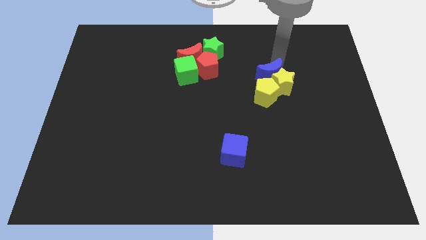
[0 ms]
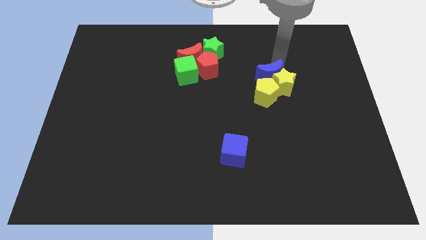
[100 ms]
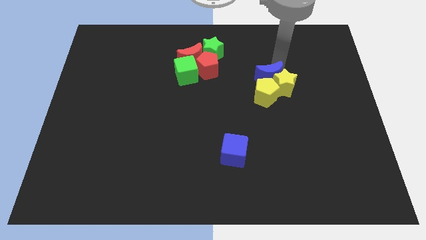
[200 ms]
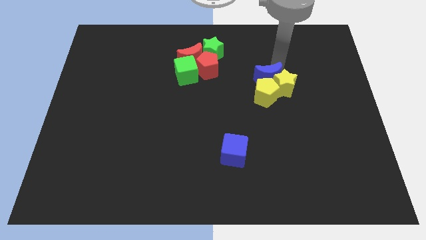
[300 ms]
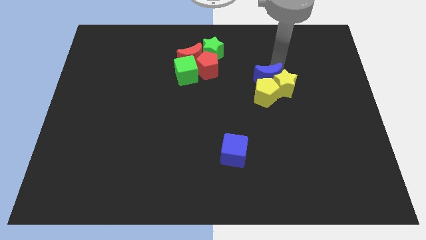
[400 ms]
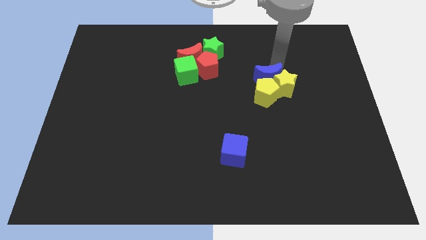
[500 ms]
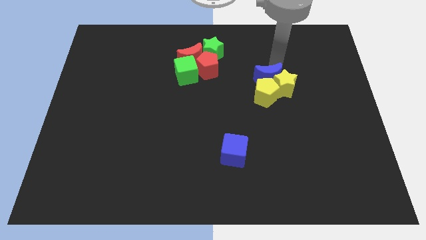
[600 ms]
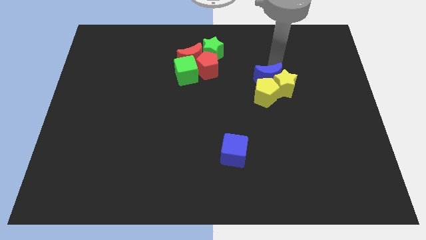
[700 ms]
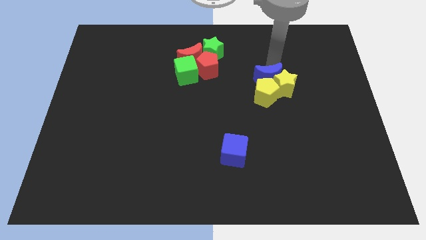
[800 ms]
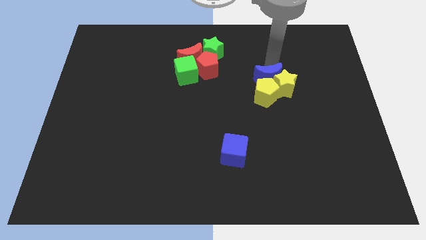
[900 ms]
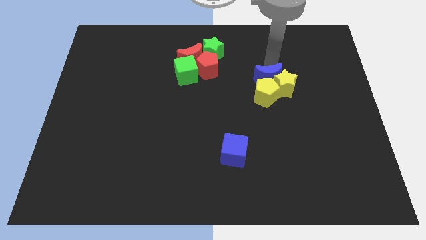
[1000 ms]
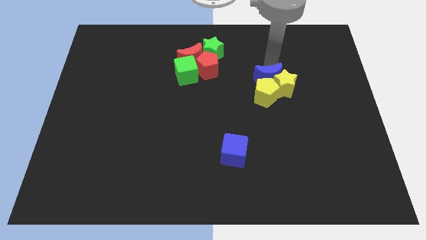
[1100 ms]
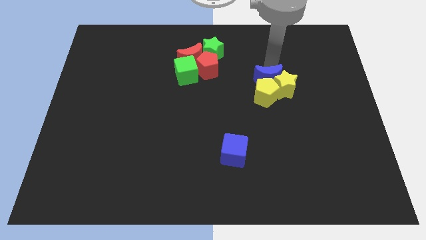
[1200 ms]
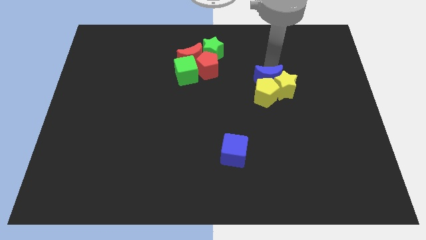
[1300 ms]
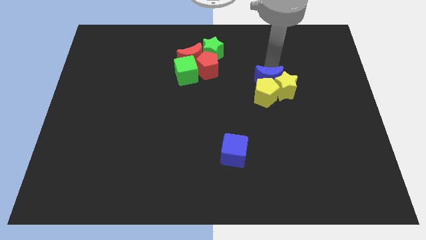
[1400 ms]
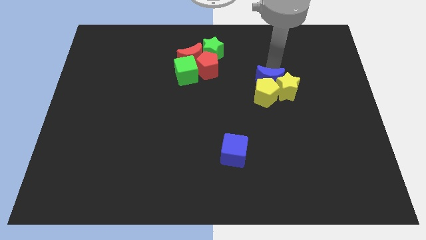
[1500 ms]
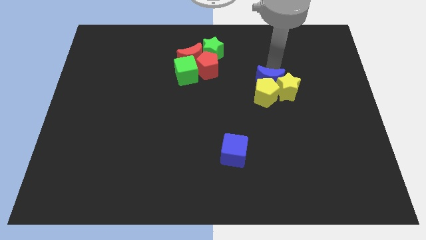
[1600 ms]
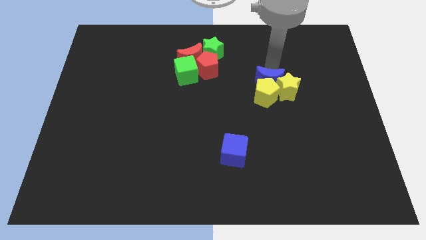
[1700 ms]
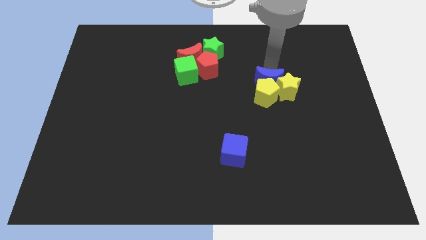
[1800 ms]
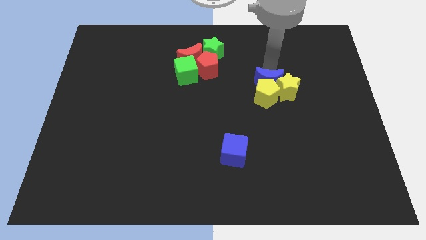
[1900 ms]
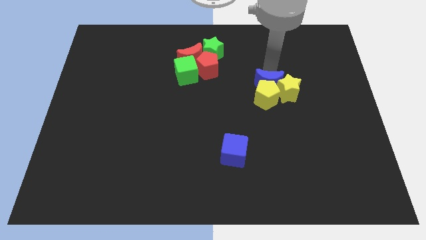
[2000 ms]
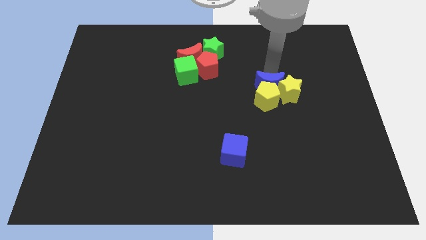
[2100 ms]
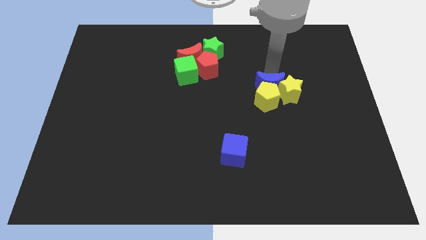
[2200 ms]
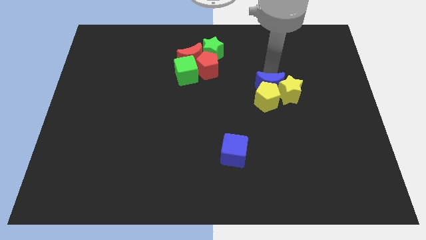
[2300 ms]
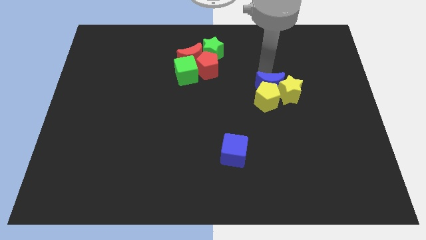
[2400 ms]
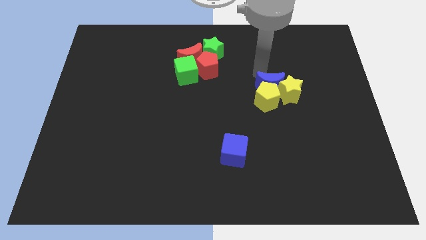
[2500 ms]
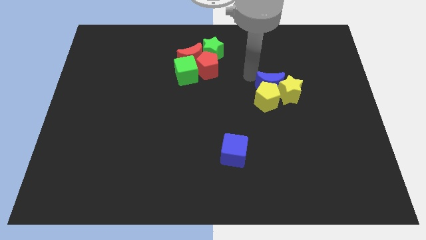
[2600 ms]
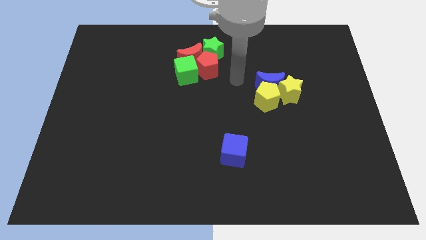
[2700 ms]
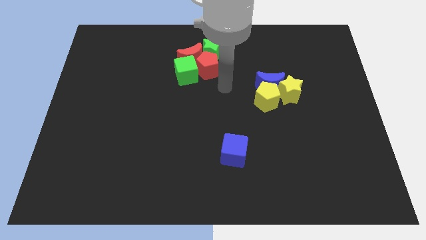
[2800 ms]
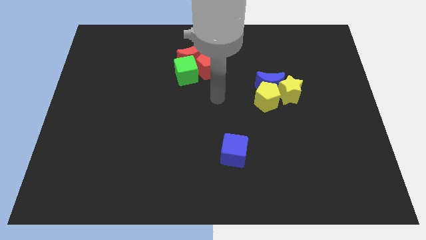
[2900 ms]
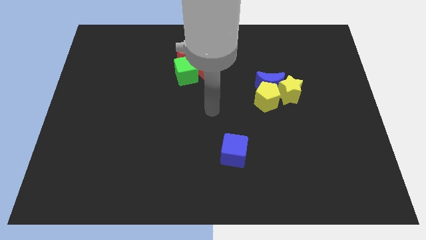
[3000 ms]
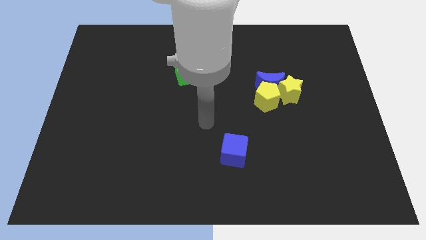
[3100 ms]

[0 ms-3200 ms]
push the blue crescent into the yellow blocks

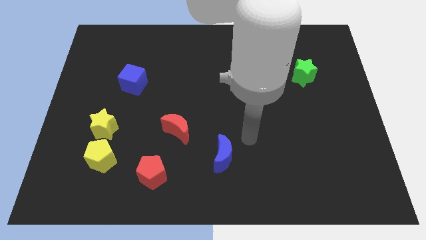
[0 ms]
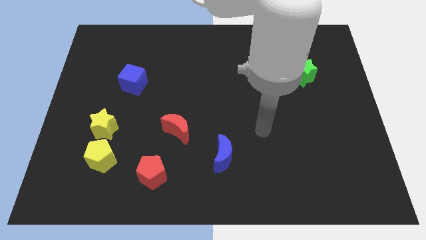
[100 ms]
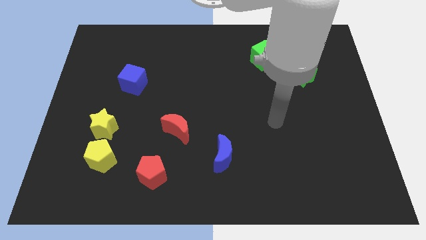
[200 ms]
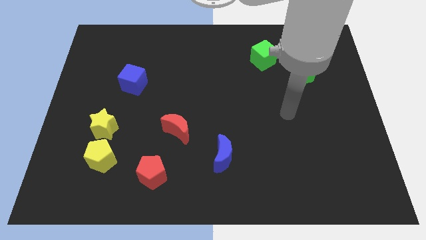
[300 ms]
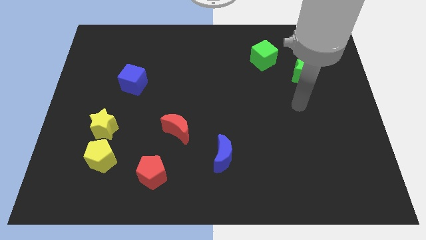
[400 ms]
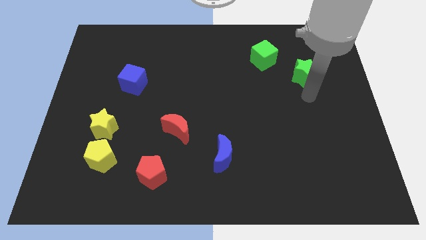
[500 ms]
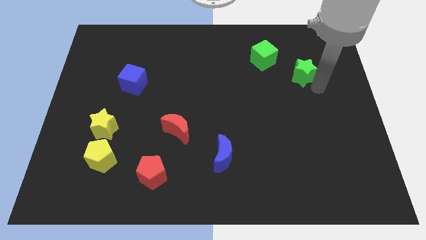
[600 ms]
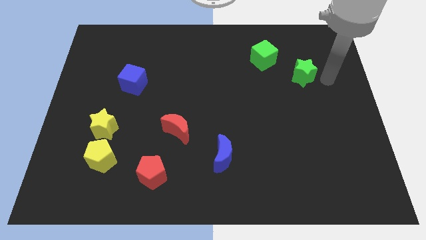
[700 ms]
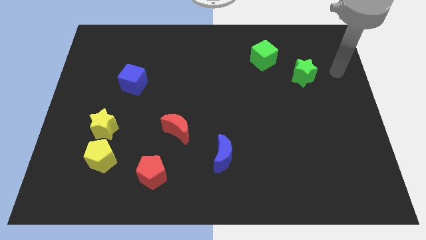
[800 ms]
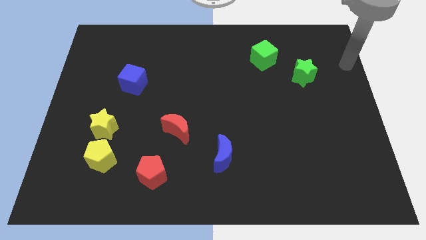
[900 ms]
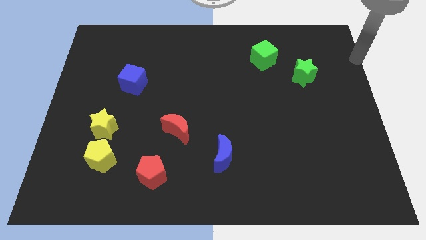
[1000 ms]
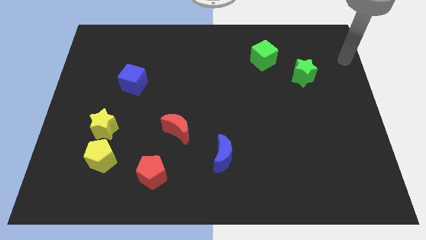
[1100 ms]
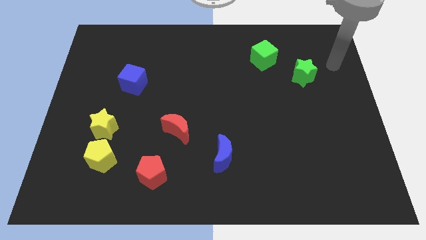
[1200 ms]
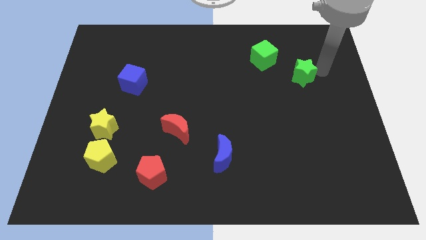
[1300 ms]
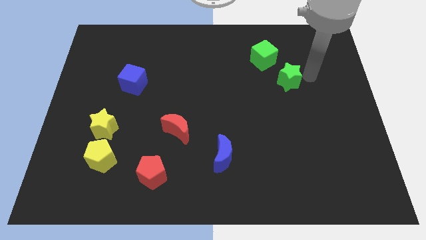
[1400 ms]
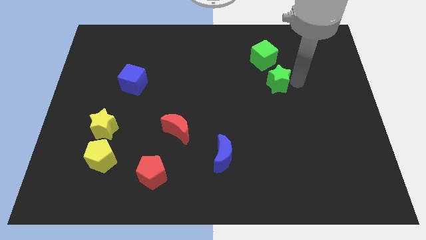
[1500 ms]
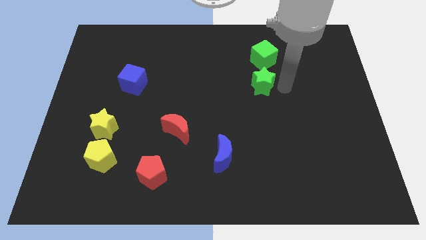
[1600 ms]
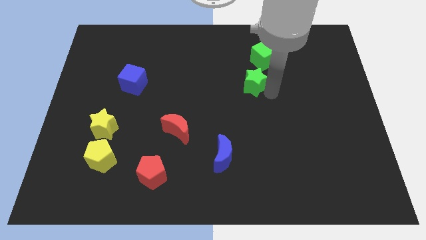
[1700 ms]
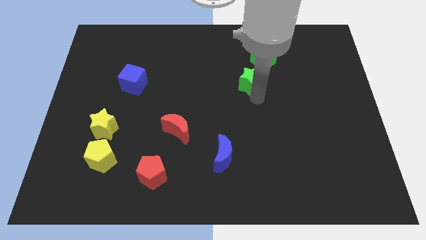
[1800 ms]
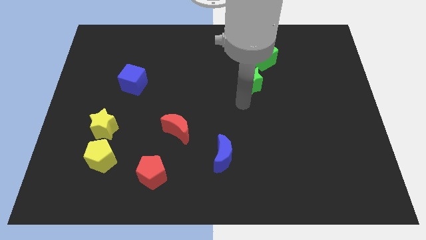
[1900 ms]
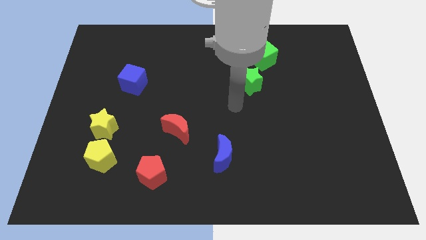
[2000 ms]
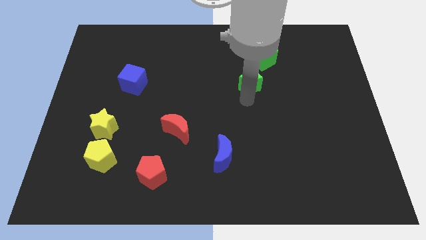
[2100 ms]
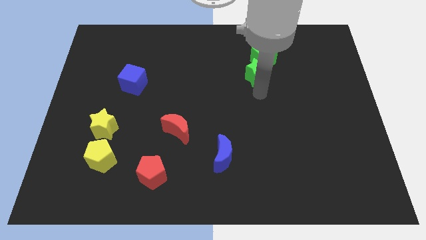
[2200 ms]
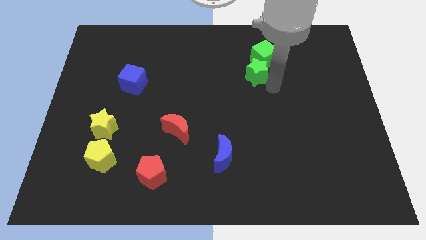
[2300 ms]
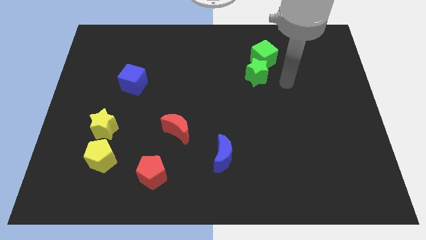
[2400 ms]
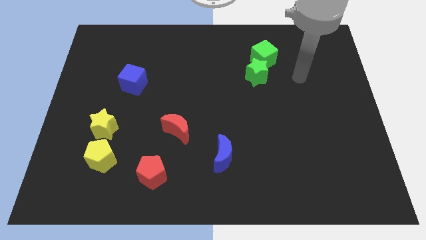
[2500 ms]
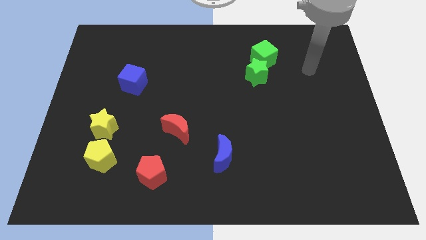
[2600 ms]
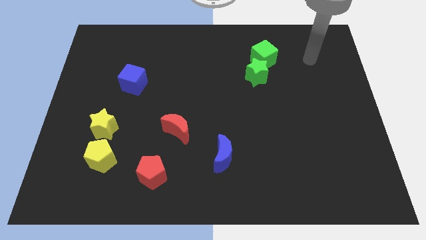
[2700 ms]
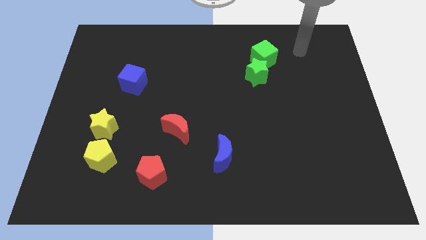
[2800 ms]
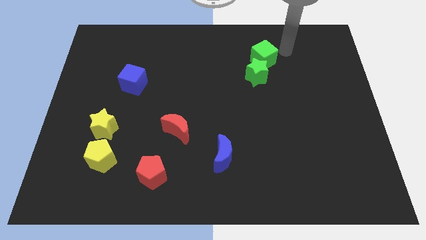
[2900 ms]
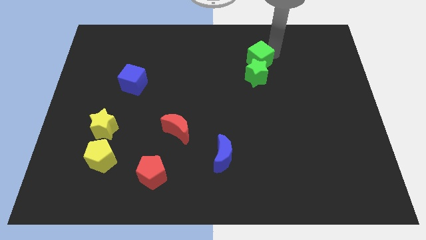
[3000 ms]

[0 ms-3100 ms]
join the green blocks at the top of the board

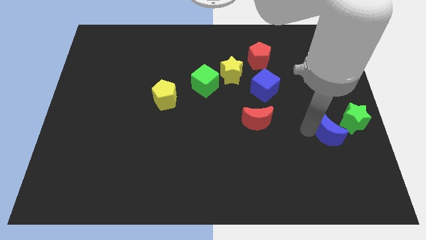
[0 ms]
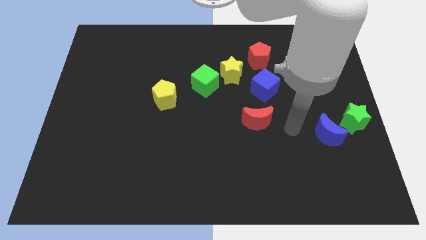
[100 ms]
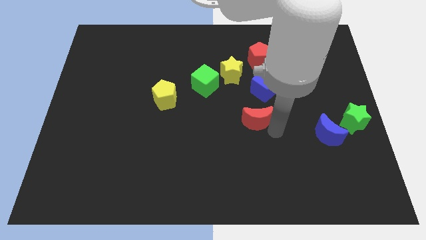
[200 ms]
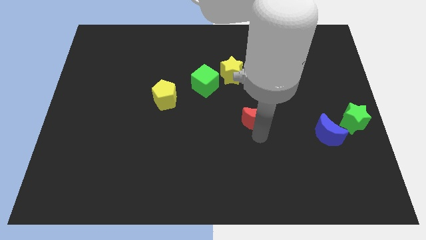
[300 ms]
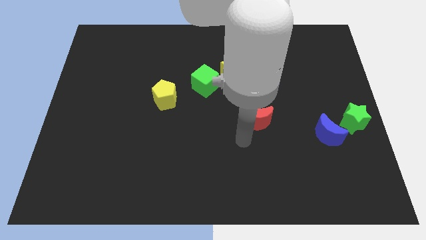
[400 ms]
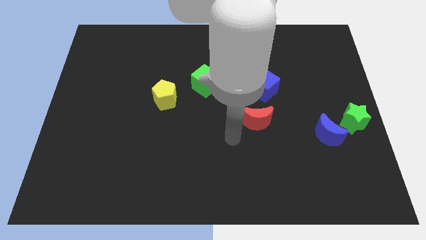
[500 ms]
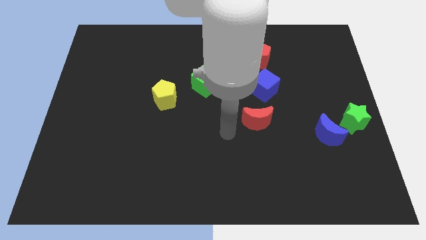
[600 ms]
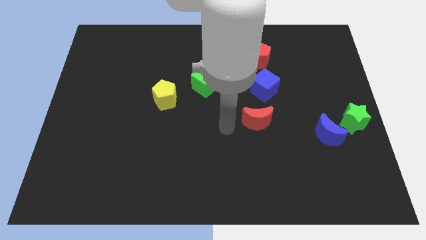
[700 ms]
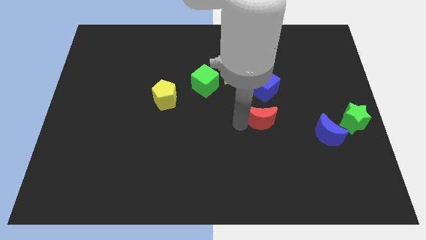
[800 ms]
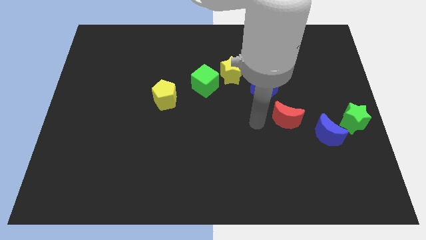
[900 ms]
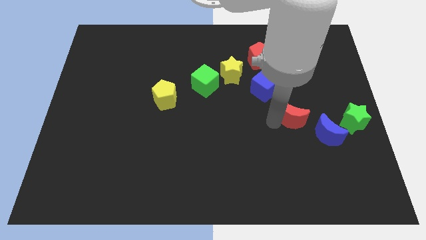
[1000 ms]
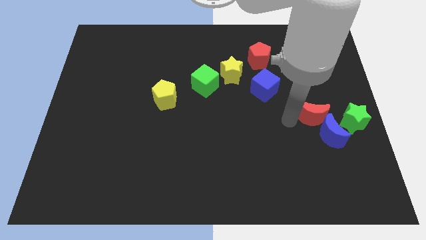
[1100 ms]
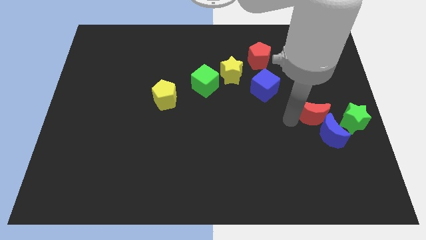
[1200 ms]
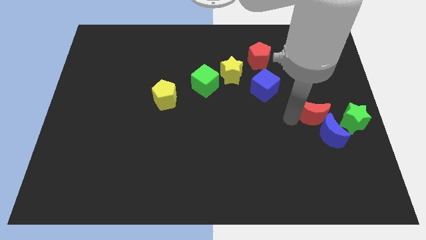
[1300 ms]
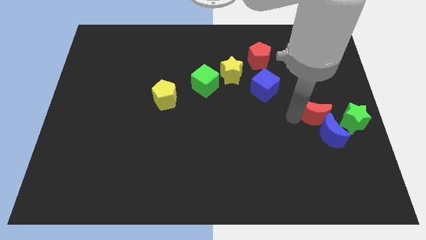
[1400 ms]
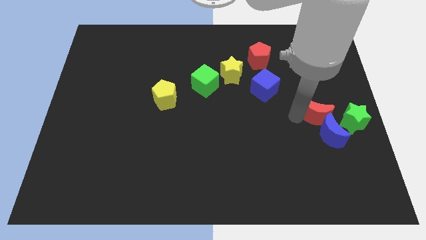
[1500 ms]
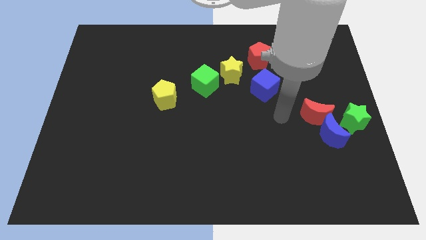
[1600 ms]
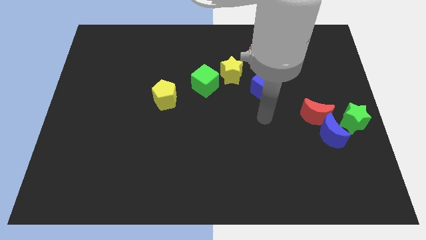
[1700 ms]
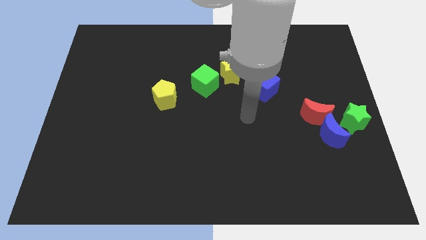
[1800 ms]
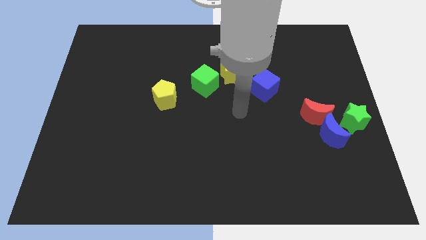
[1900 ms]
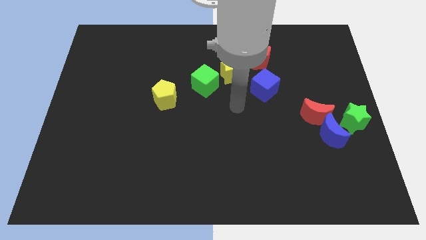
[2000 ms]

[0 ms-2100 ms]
move the red moon into the blue moon

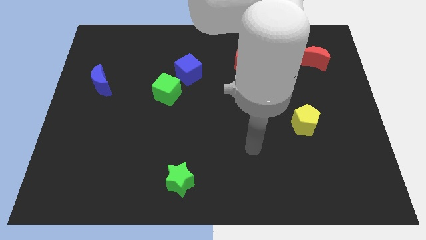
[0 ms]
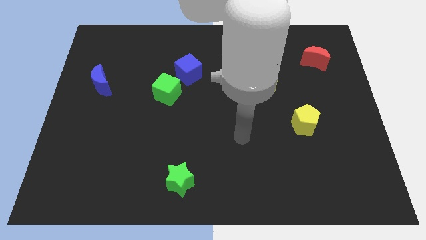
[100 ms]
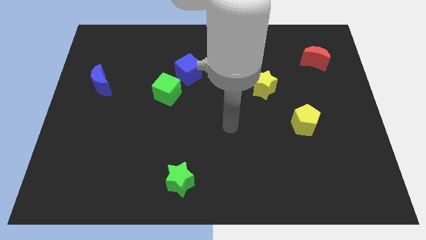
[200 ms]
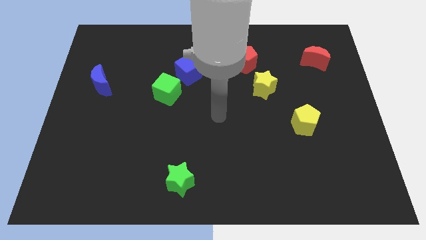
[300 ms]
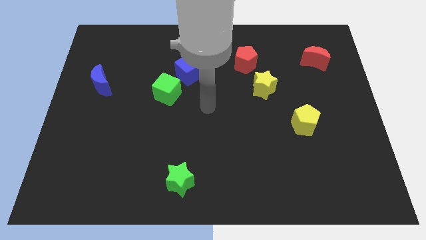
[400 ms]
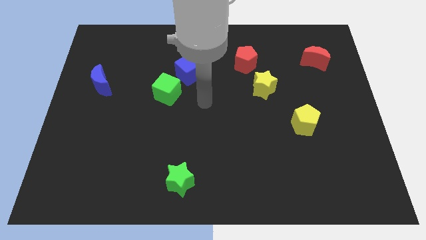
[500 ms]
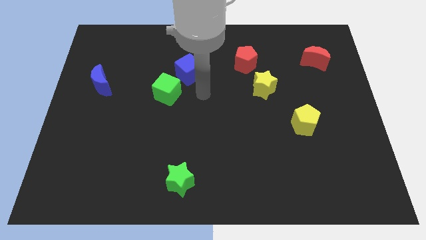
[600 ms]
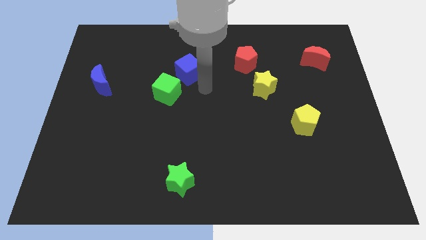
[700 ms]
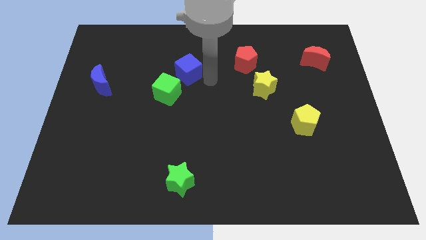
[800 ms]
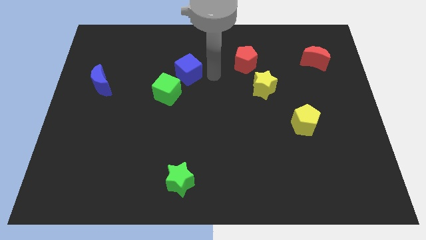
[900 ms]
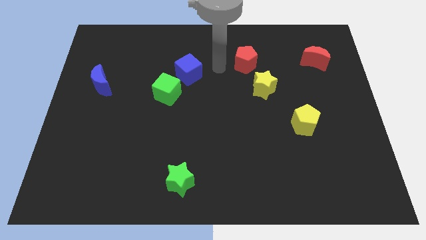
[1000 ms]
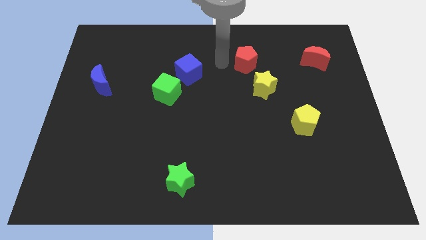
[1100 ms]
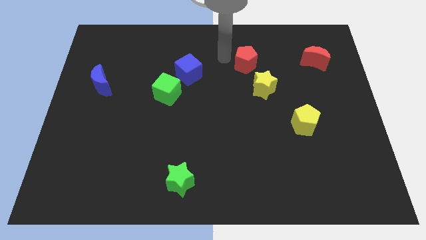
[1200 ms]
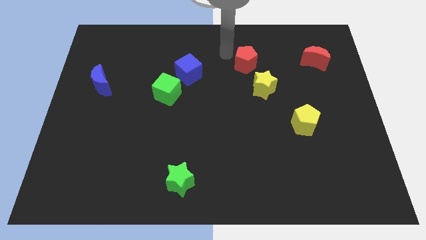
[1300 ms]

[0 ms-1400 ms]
point your hand at the left side of the red pentagon
